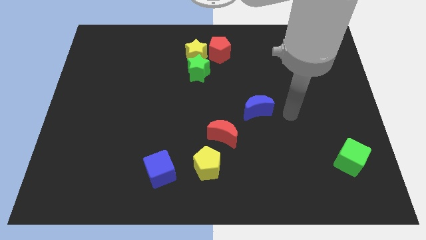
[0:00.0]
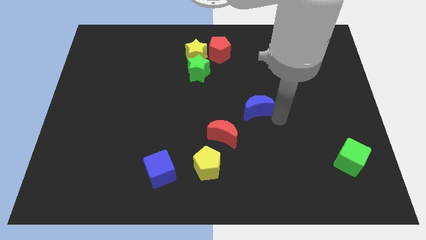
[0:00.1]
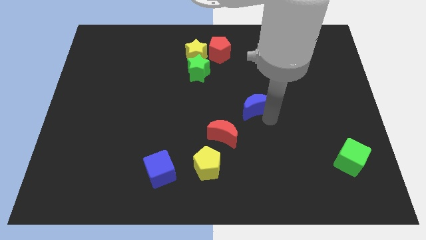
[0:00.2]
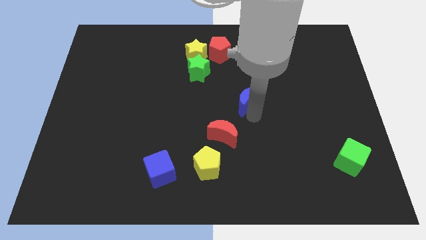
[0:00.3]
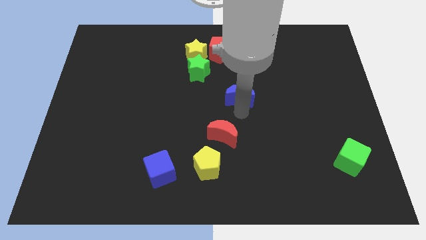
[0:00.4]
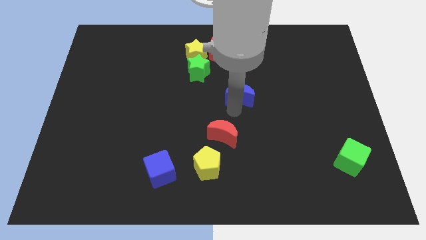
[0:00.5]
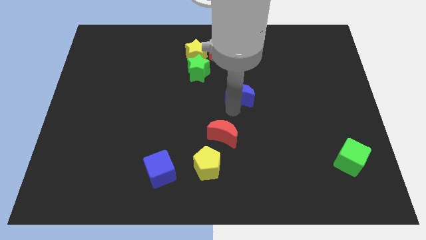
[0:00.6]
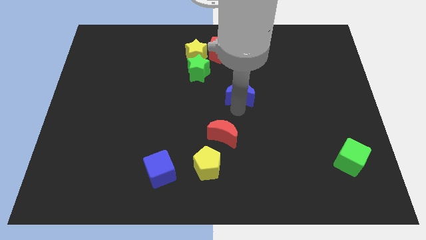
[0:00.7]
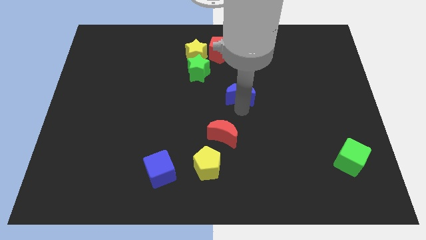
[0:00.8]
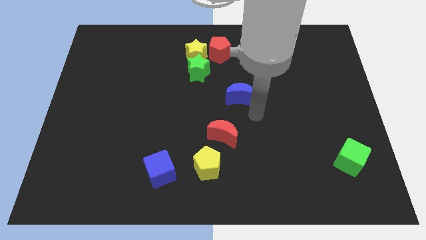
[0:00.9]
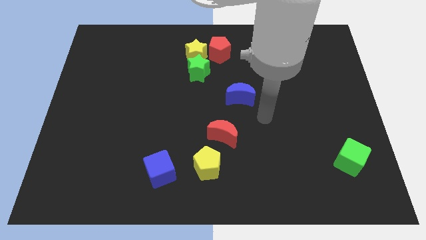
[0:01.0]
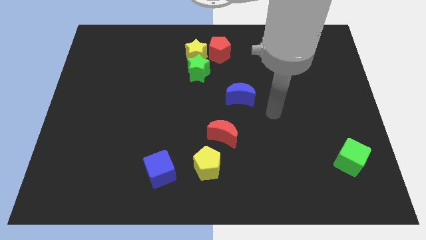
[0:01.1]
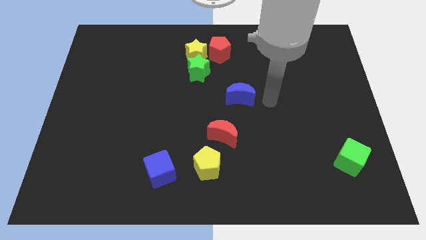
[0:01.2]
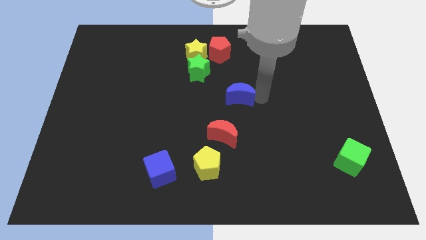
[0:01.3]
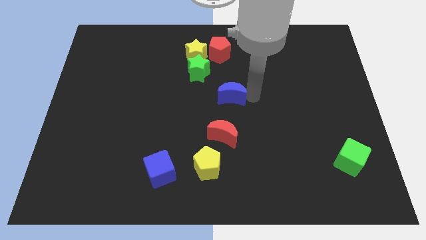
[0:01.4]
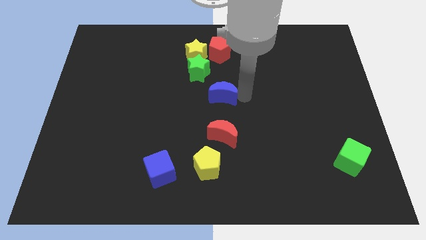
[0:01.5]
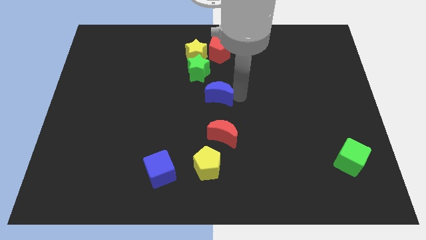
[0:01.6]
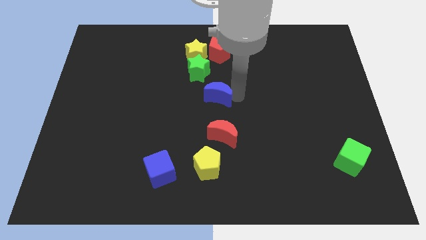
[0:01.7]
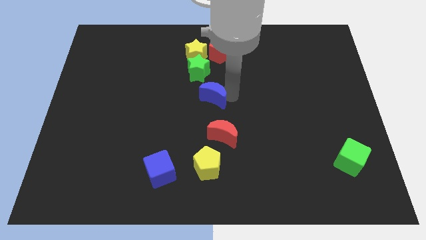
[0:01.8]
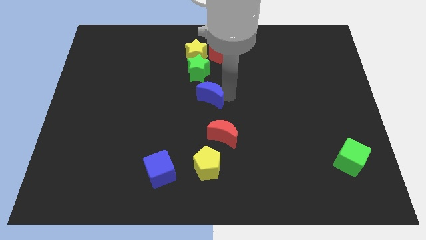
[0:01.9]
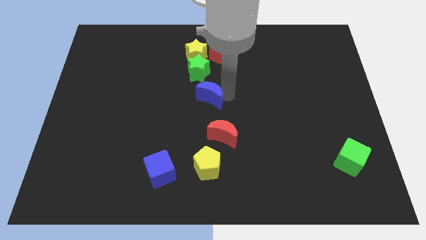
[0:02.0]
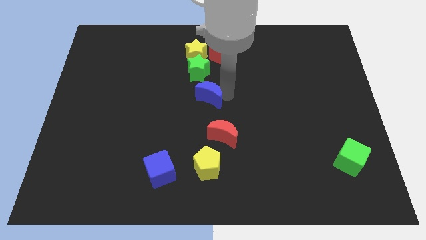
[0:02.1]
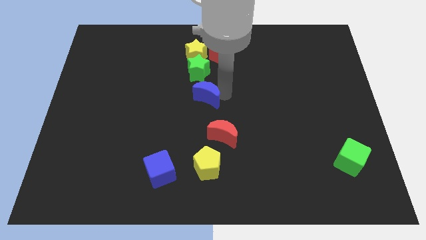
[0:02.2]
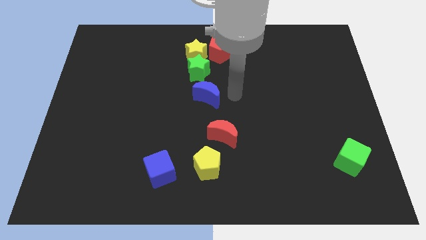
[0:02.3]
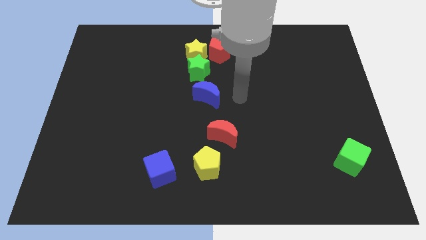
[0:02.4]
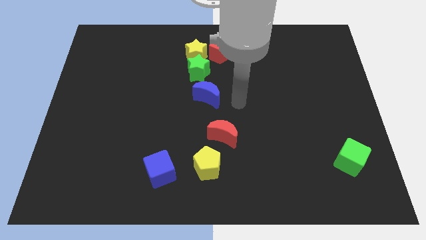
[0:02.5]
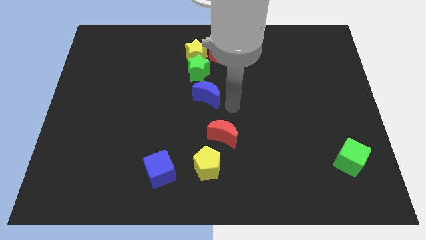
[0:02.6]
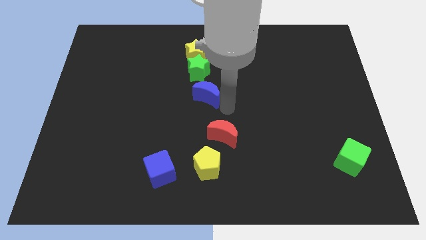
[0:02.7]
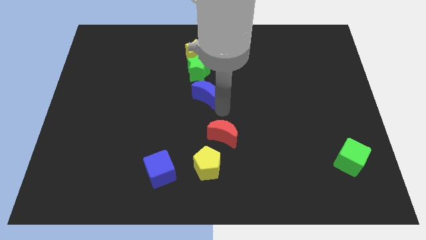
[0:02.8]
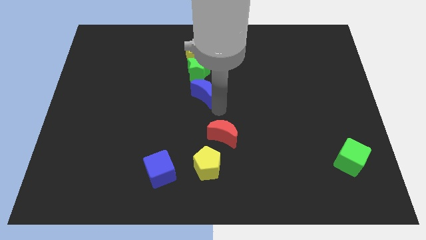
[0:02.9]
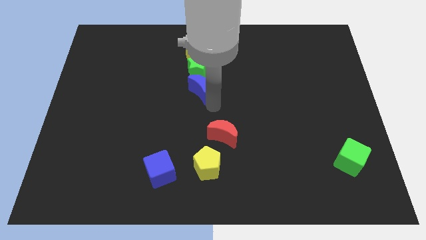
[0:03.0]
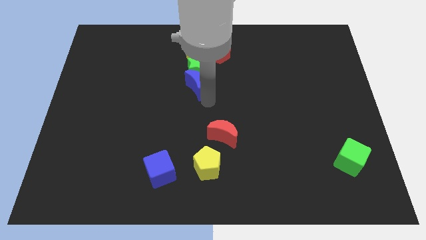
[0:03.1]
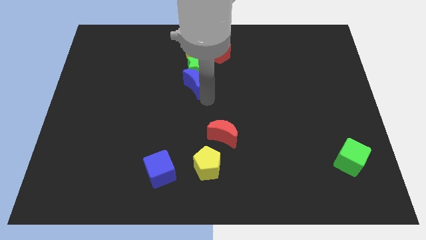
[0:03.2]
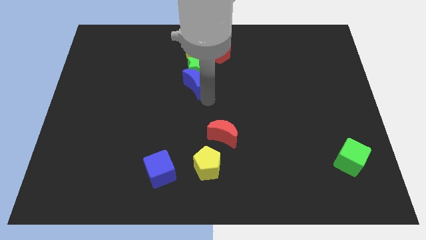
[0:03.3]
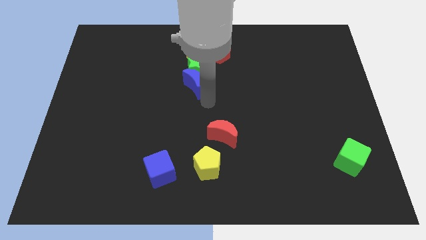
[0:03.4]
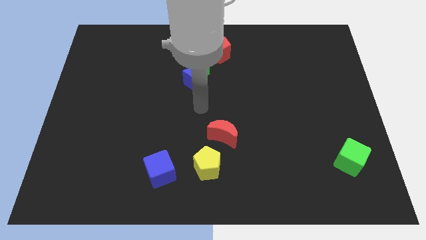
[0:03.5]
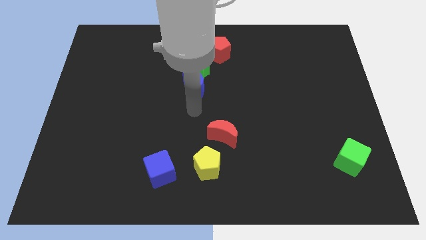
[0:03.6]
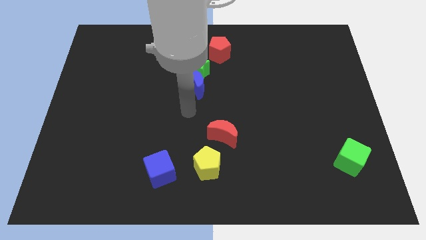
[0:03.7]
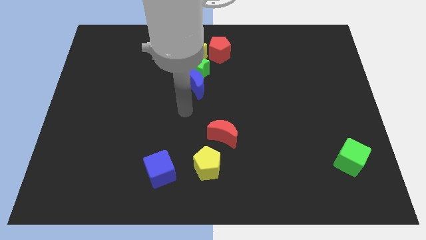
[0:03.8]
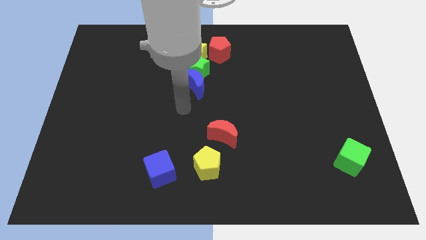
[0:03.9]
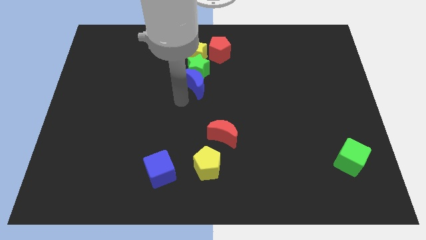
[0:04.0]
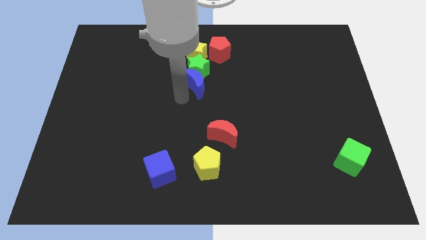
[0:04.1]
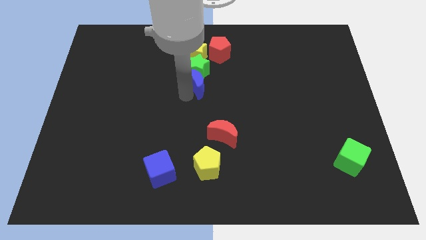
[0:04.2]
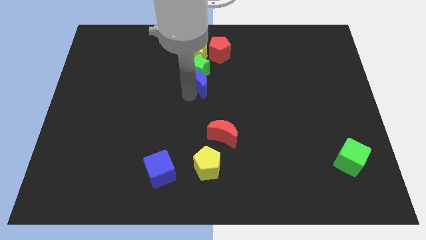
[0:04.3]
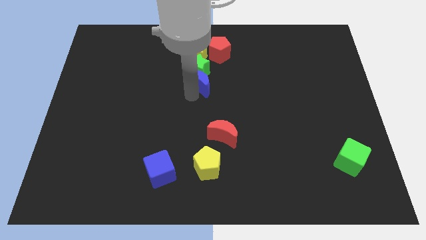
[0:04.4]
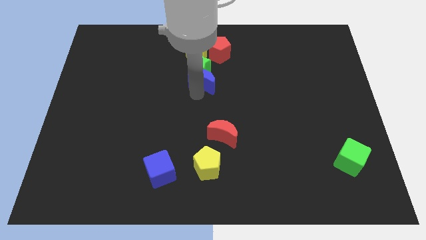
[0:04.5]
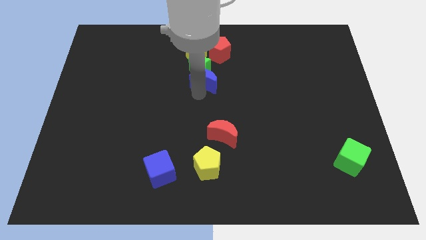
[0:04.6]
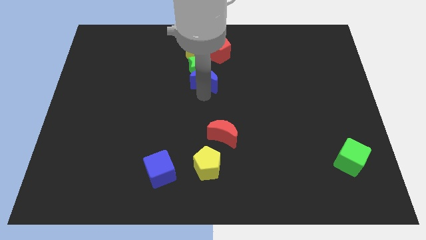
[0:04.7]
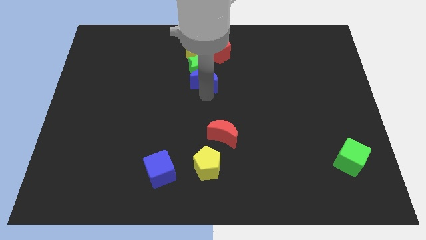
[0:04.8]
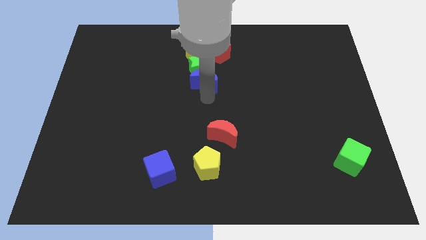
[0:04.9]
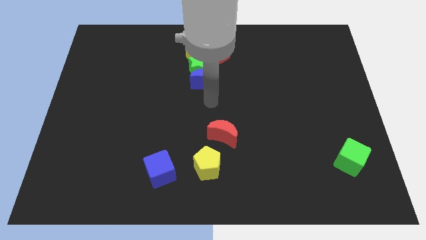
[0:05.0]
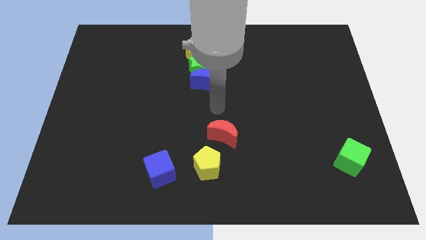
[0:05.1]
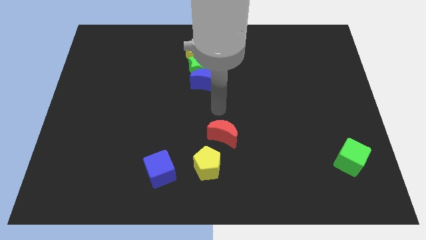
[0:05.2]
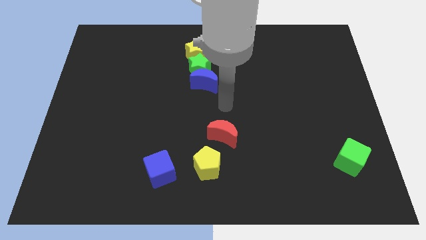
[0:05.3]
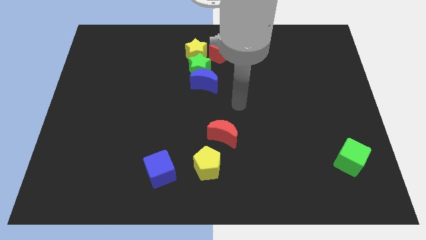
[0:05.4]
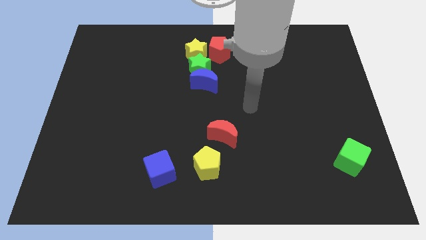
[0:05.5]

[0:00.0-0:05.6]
touch green star with blue crescent

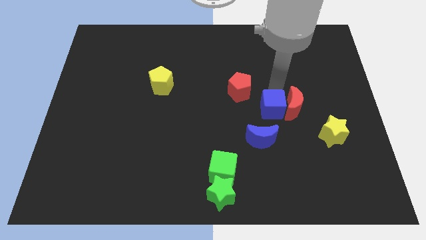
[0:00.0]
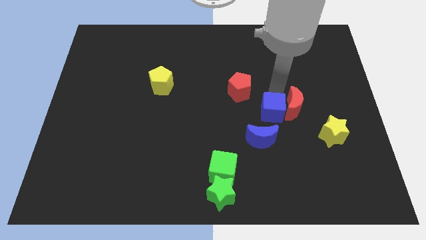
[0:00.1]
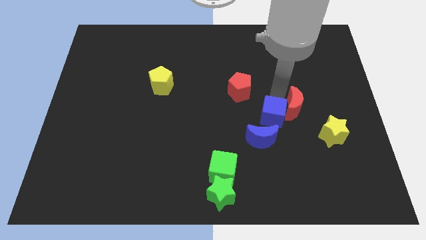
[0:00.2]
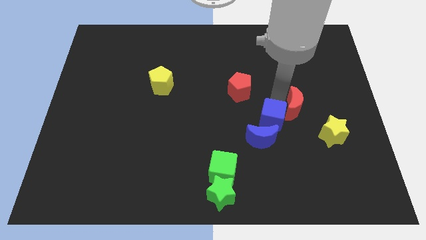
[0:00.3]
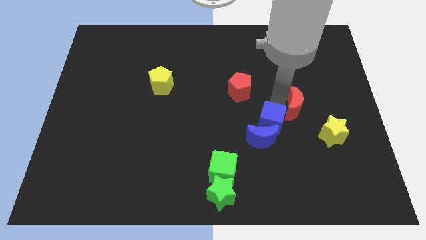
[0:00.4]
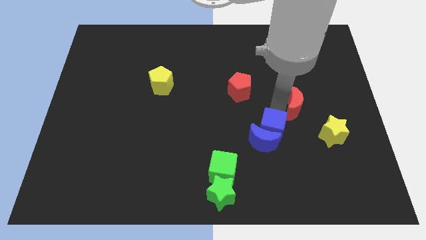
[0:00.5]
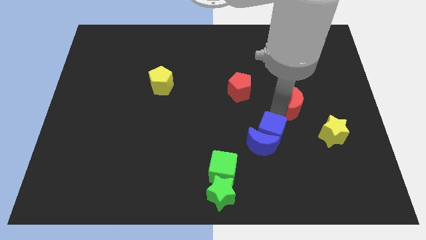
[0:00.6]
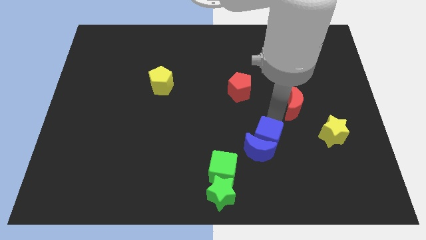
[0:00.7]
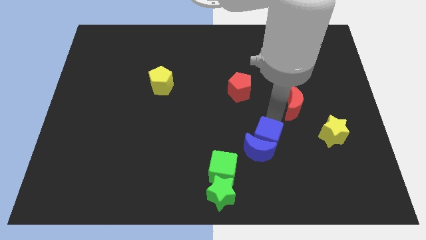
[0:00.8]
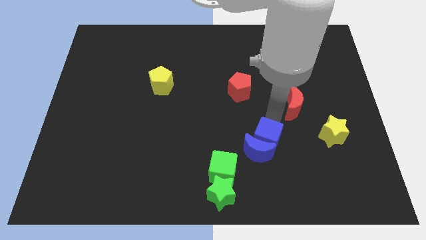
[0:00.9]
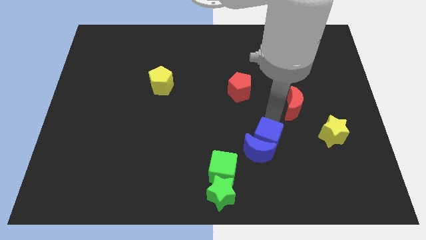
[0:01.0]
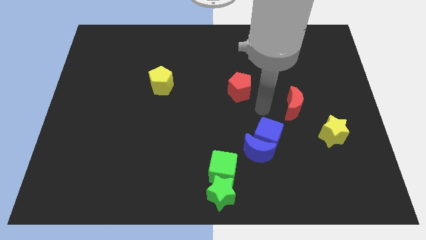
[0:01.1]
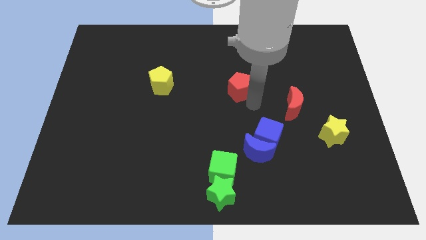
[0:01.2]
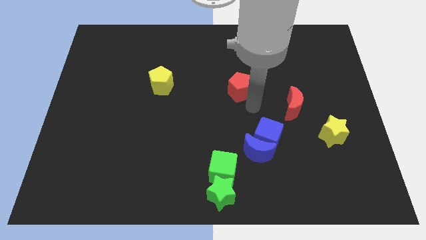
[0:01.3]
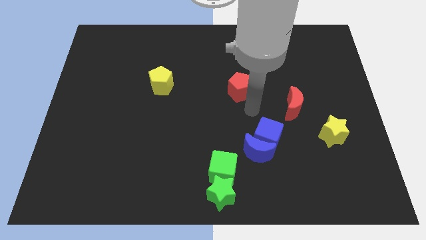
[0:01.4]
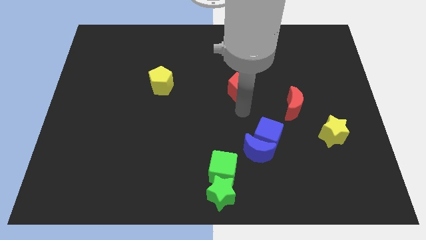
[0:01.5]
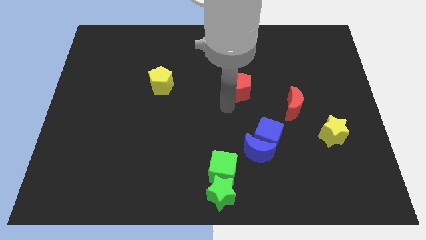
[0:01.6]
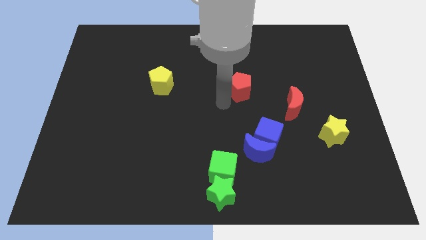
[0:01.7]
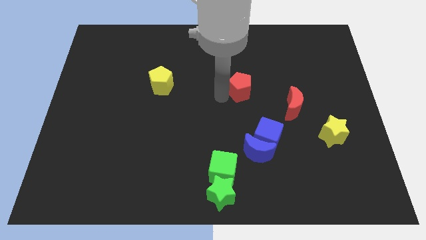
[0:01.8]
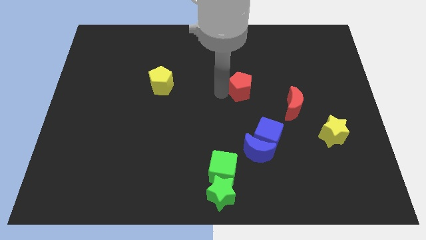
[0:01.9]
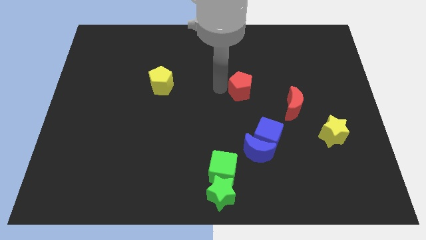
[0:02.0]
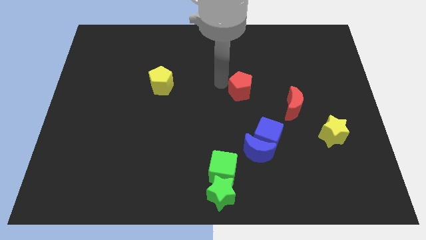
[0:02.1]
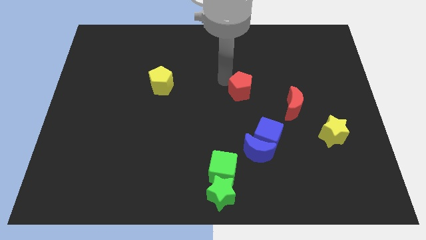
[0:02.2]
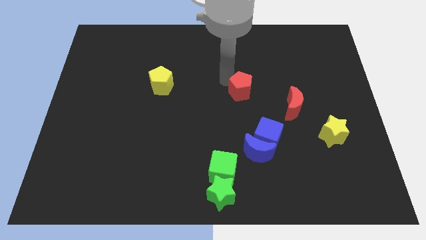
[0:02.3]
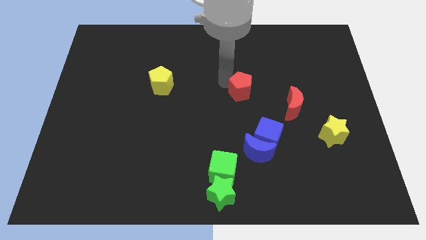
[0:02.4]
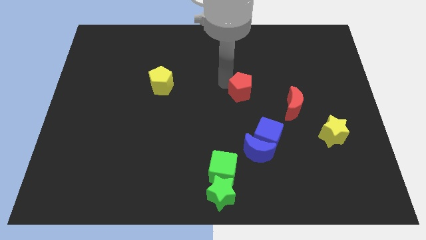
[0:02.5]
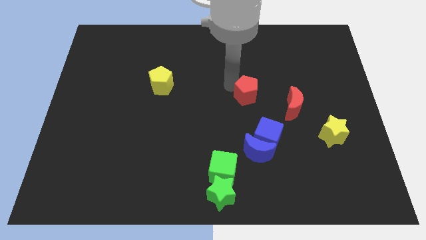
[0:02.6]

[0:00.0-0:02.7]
place the blue cube towards blue crescent

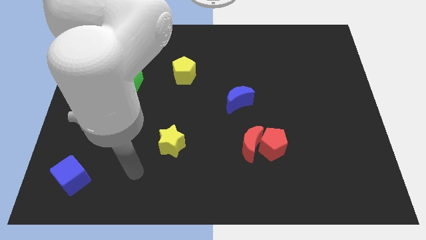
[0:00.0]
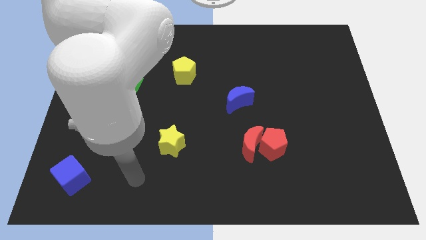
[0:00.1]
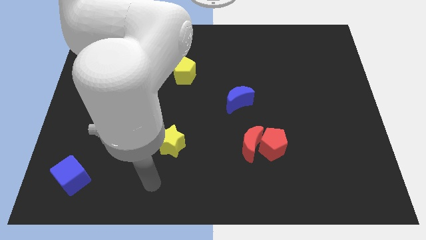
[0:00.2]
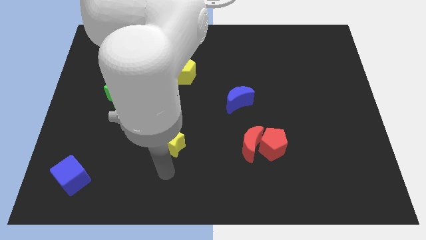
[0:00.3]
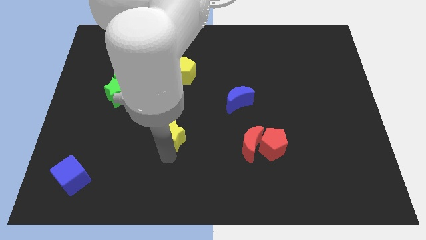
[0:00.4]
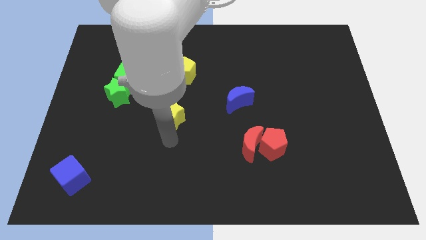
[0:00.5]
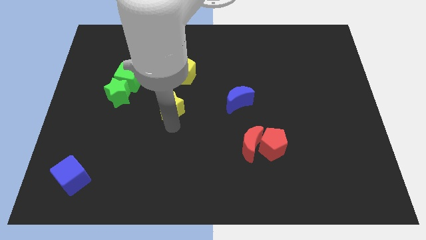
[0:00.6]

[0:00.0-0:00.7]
push the yellow star to the center of the board

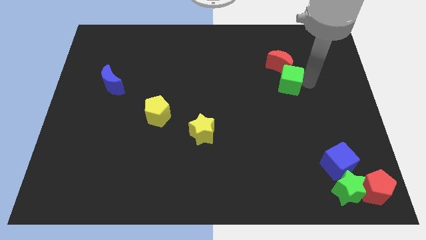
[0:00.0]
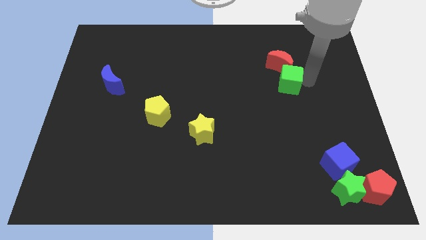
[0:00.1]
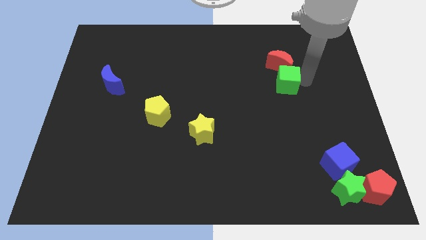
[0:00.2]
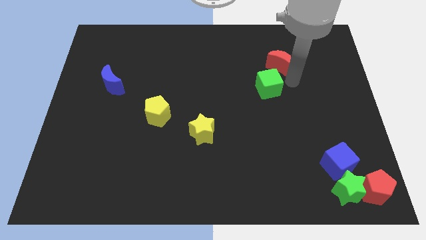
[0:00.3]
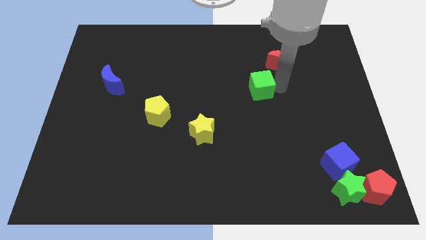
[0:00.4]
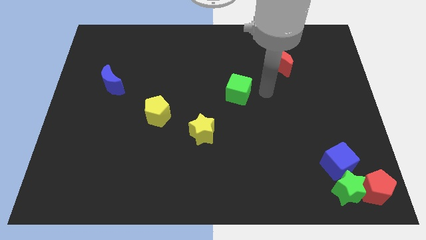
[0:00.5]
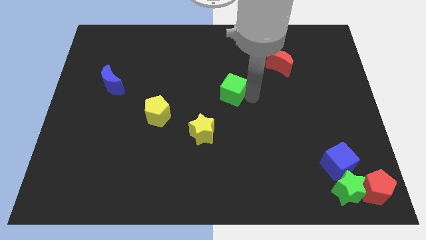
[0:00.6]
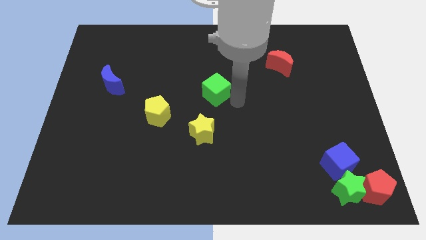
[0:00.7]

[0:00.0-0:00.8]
move the green cube at the center of the board
